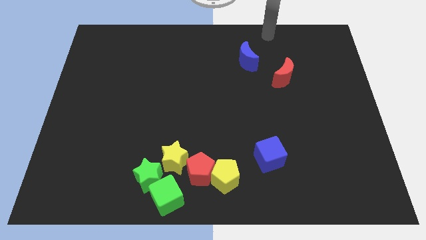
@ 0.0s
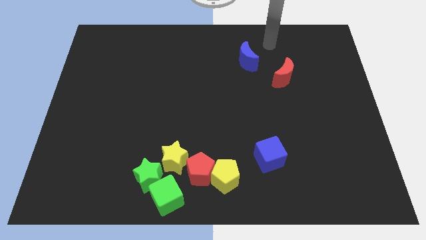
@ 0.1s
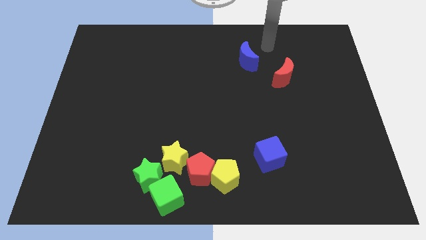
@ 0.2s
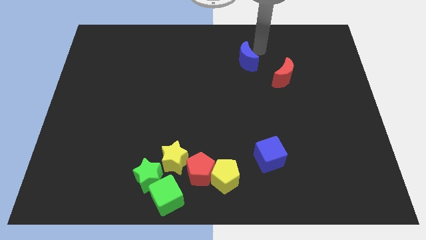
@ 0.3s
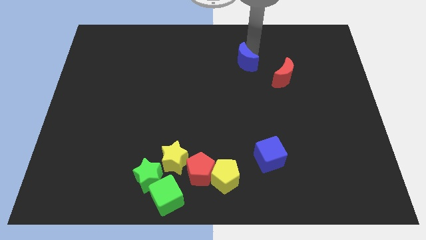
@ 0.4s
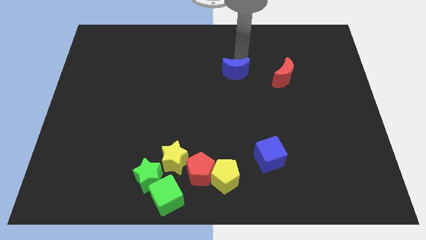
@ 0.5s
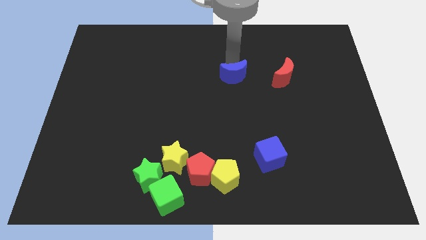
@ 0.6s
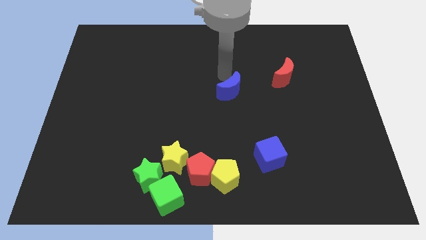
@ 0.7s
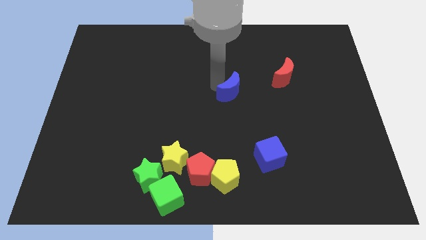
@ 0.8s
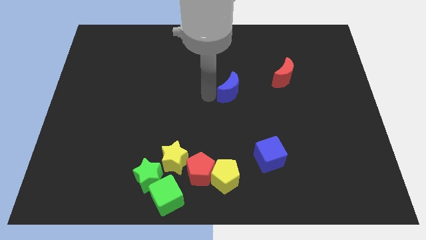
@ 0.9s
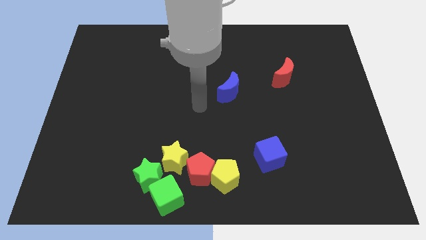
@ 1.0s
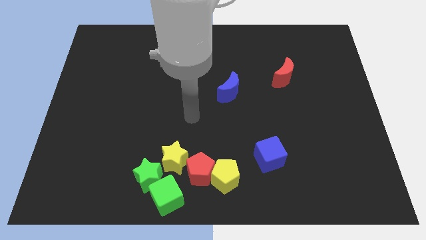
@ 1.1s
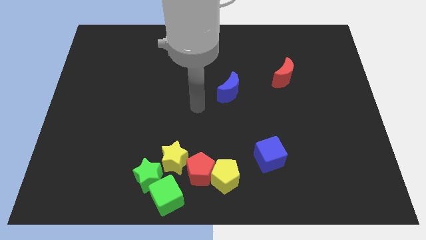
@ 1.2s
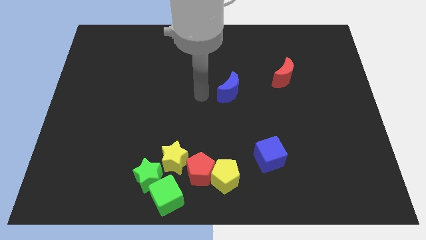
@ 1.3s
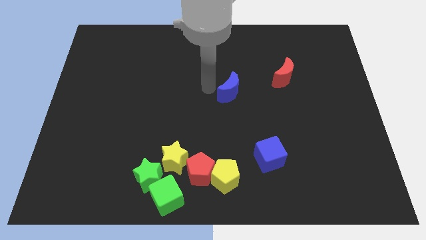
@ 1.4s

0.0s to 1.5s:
push the blue crescent to the center of the board

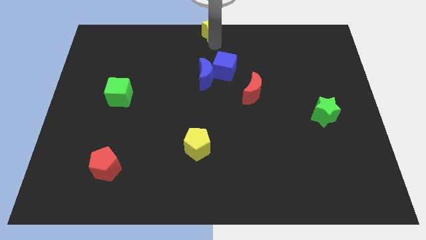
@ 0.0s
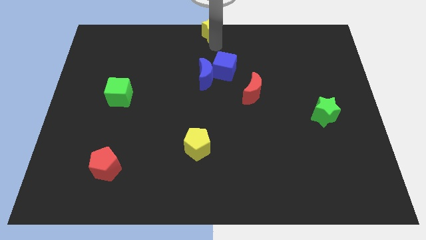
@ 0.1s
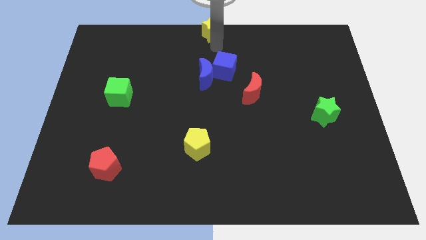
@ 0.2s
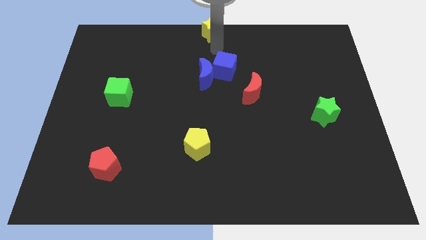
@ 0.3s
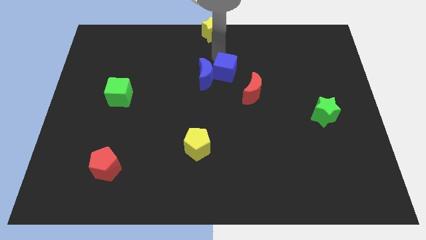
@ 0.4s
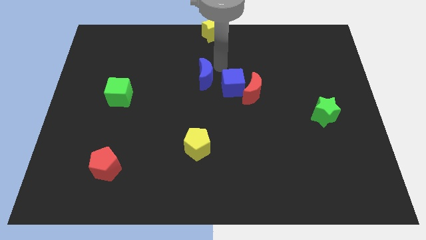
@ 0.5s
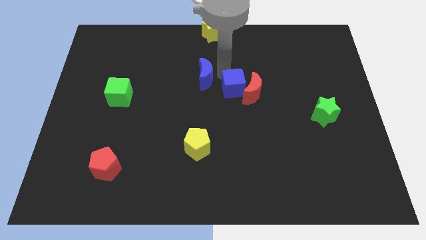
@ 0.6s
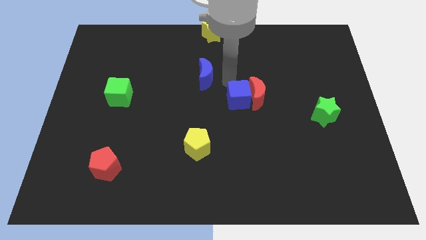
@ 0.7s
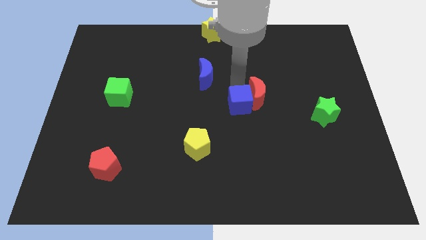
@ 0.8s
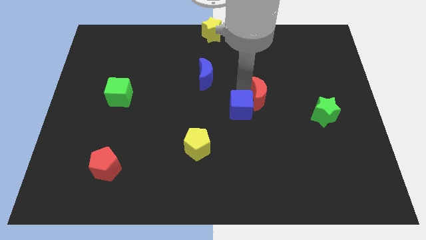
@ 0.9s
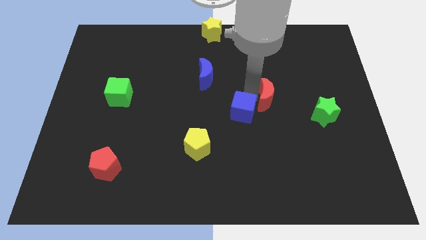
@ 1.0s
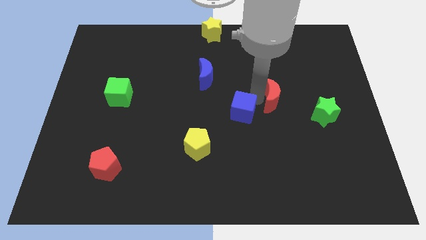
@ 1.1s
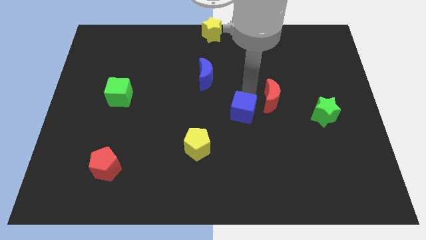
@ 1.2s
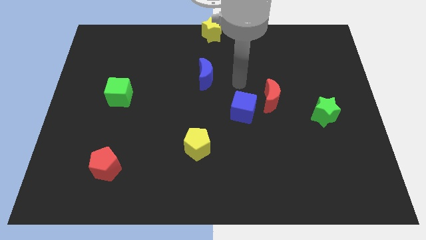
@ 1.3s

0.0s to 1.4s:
place the blue cube to the left of the green star

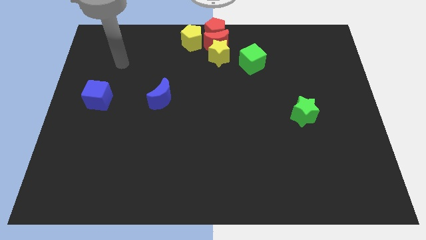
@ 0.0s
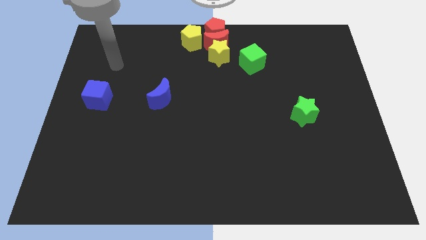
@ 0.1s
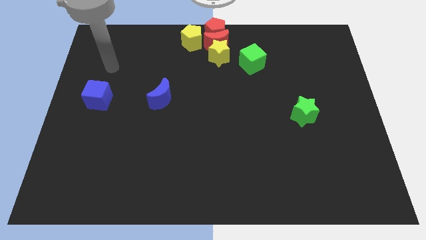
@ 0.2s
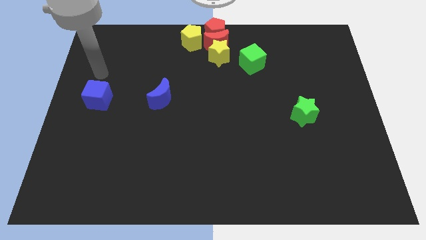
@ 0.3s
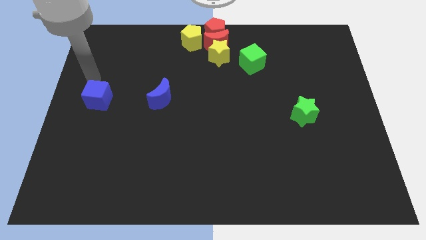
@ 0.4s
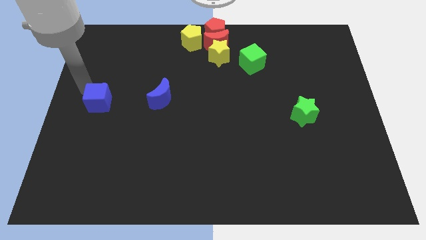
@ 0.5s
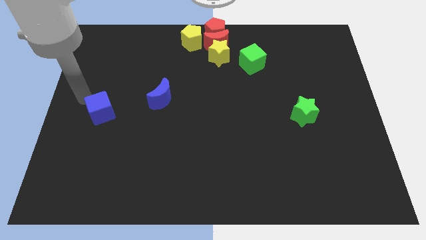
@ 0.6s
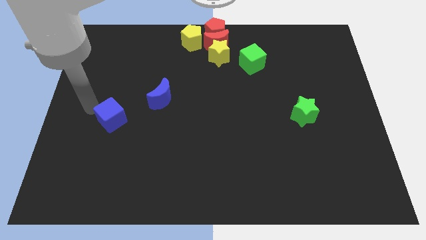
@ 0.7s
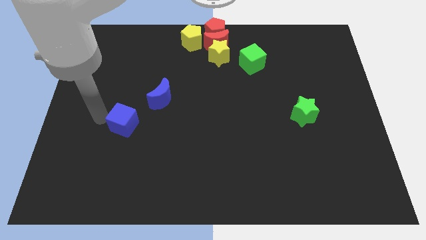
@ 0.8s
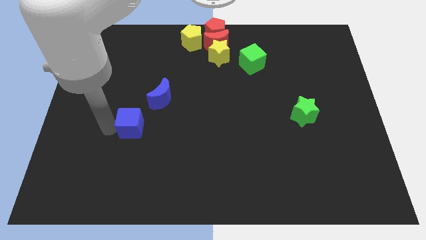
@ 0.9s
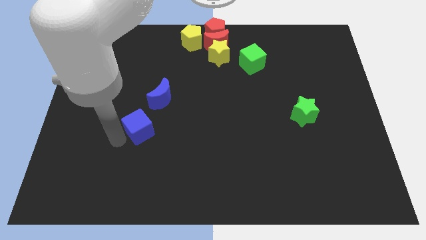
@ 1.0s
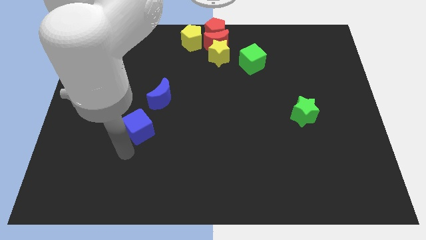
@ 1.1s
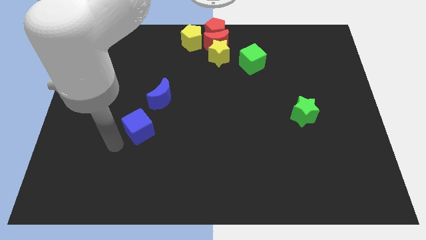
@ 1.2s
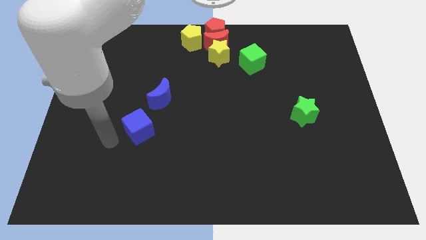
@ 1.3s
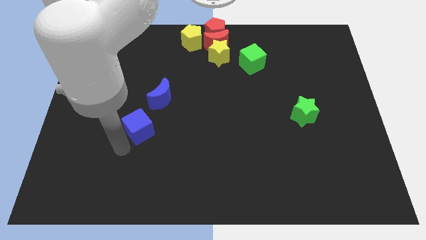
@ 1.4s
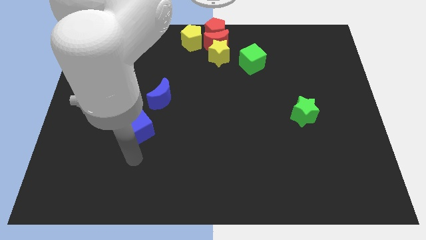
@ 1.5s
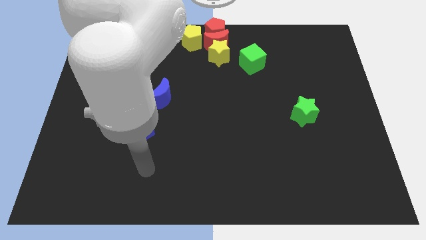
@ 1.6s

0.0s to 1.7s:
slightly move blue cube towards the bottom of the board

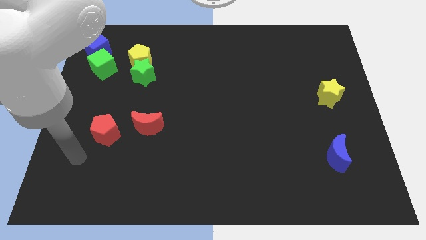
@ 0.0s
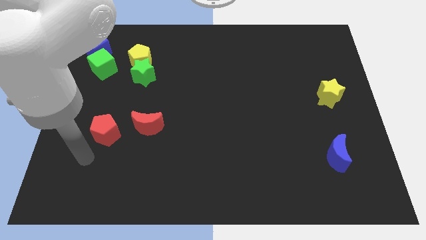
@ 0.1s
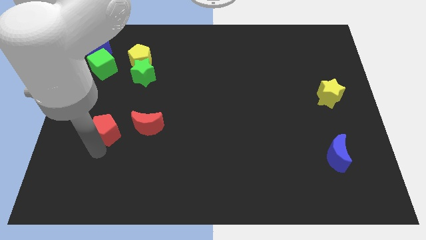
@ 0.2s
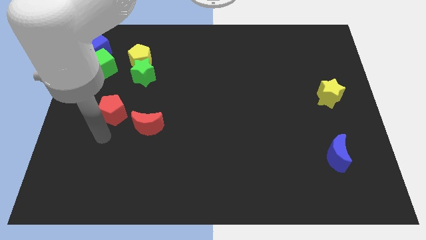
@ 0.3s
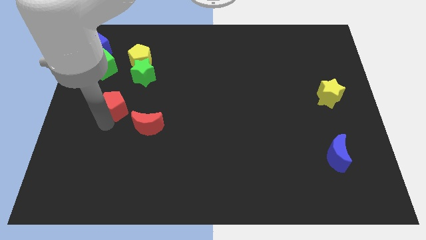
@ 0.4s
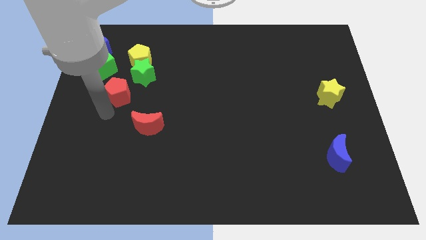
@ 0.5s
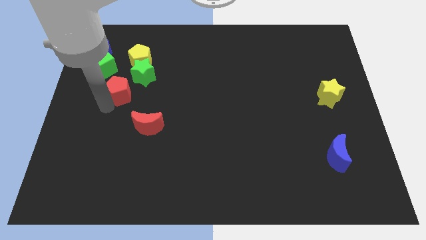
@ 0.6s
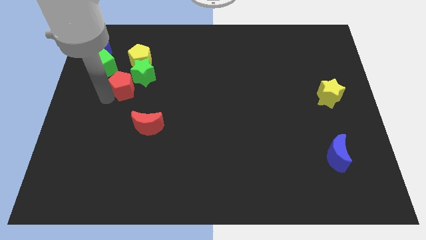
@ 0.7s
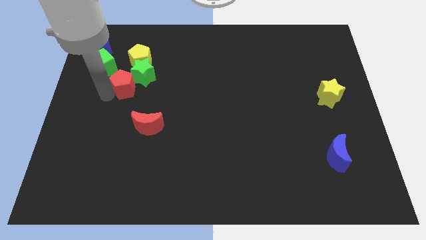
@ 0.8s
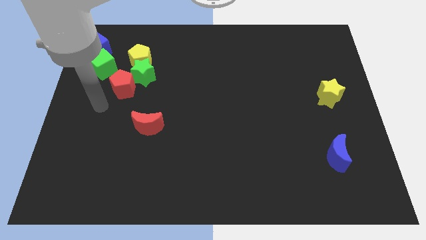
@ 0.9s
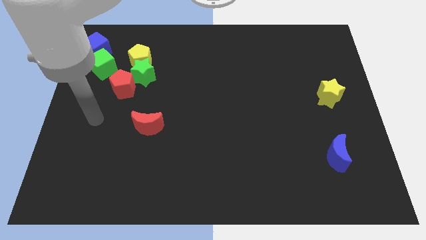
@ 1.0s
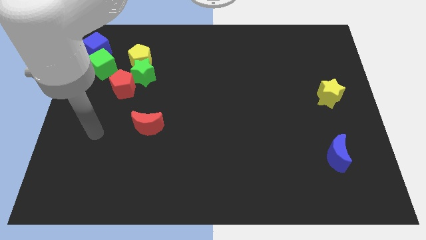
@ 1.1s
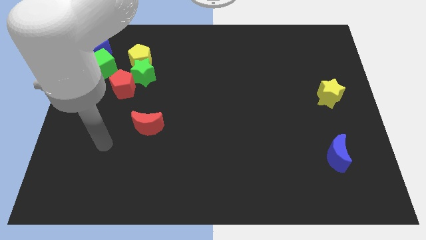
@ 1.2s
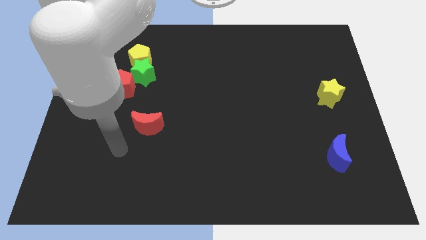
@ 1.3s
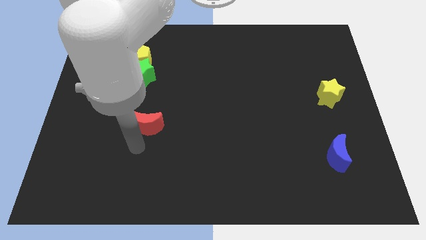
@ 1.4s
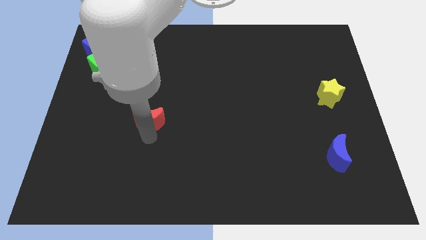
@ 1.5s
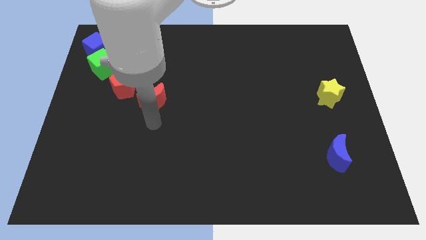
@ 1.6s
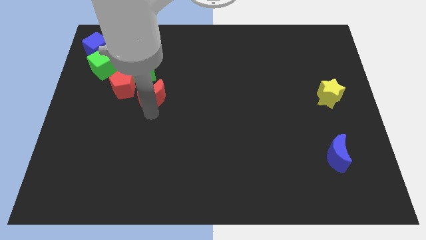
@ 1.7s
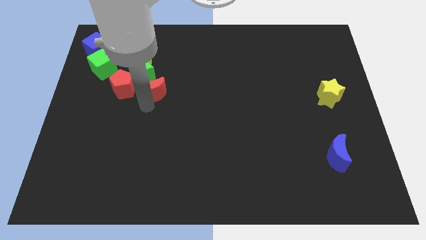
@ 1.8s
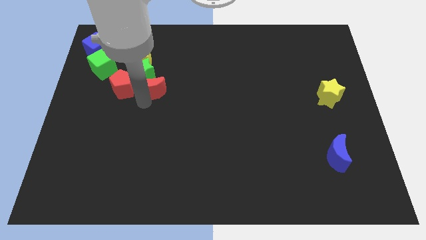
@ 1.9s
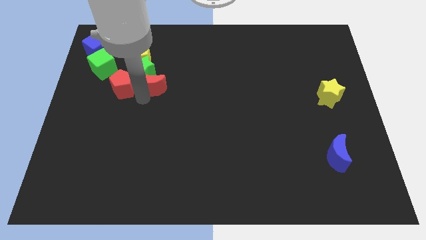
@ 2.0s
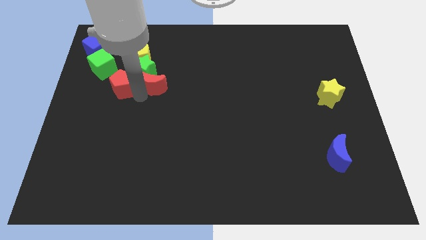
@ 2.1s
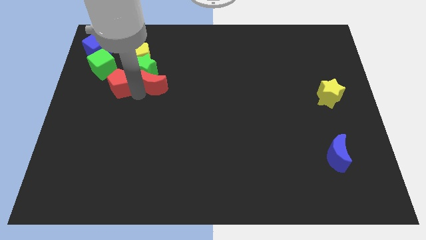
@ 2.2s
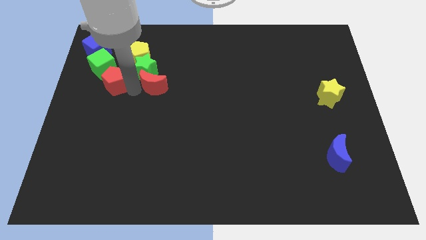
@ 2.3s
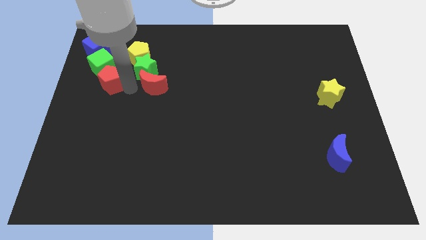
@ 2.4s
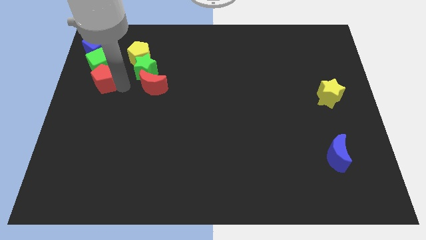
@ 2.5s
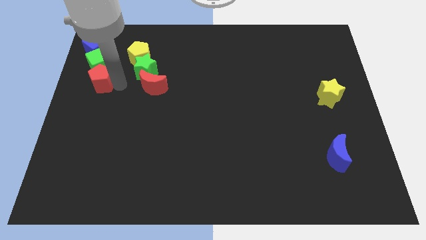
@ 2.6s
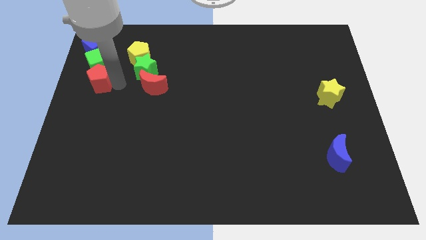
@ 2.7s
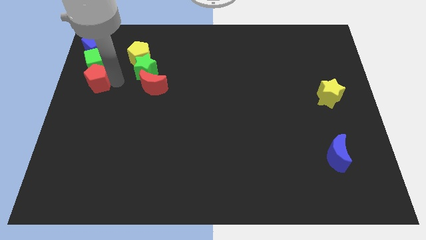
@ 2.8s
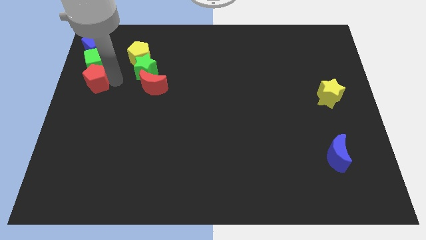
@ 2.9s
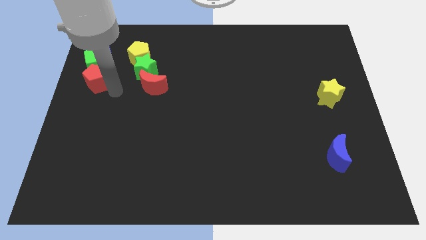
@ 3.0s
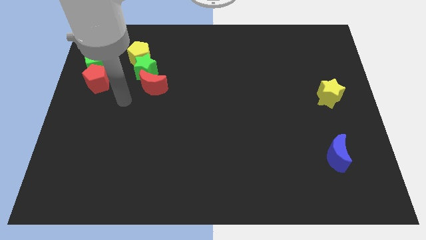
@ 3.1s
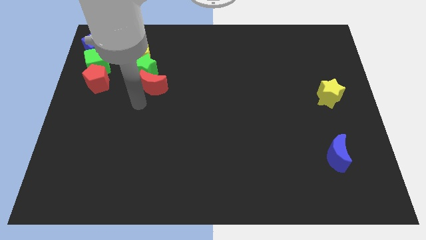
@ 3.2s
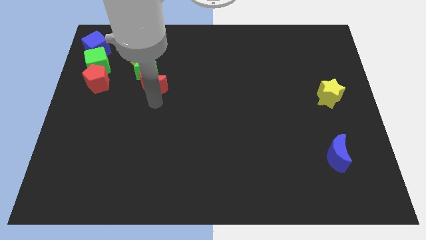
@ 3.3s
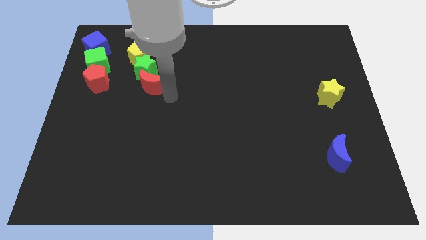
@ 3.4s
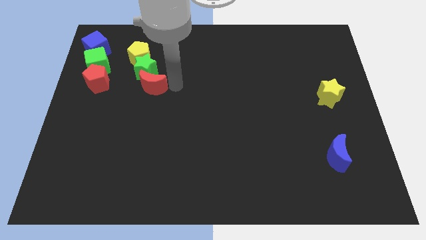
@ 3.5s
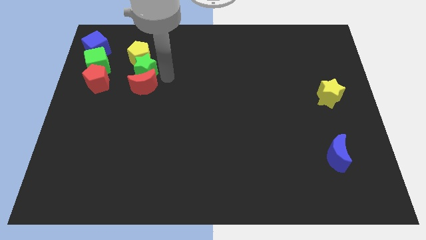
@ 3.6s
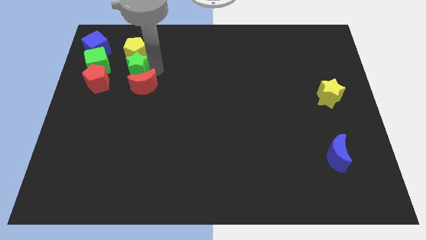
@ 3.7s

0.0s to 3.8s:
make a parallel line with the blue cube green cube red pentagon yellow pentagon green star and red crescent at the top left of the board

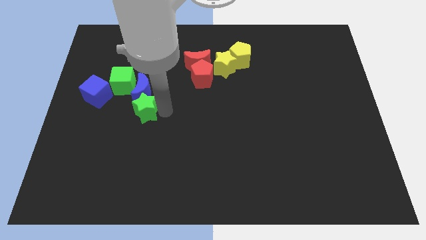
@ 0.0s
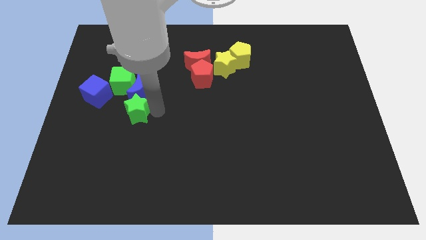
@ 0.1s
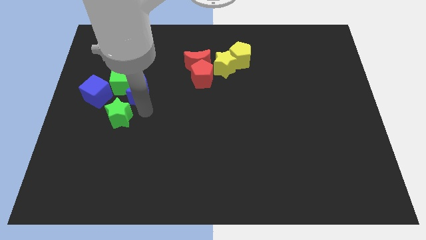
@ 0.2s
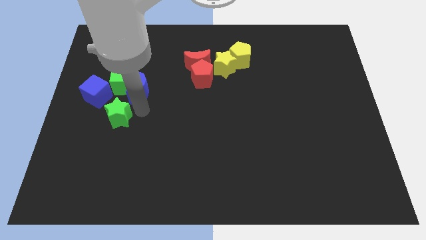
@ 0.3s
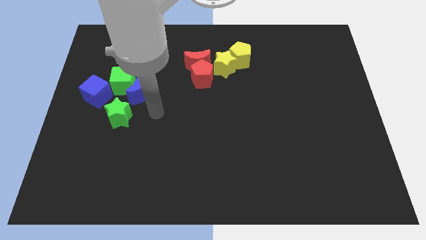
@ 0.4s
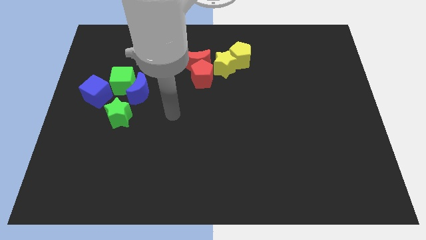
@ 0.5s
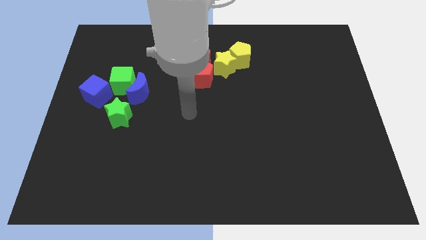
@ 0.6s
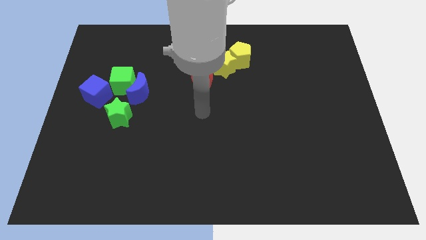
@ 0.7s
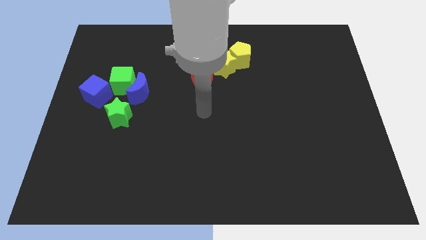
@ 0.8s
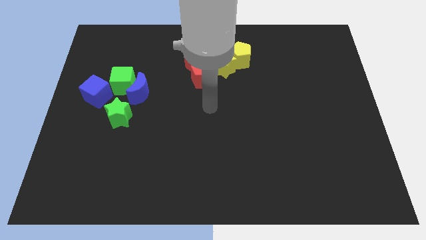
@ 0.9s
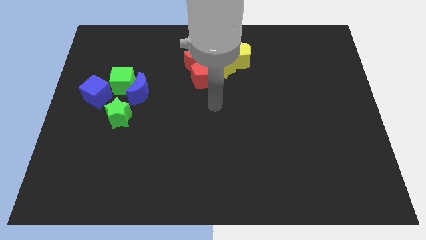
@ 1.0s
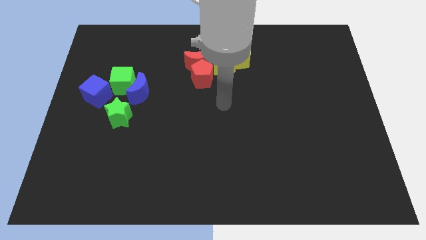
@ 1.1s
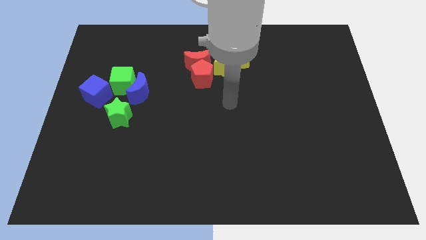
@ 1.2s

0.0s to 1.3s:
push the green star below the green cube
